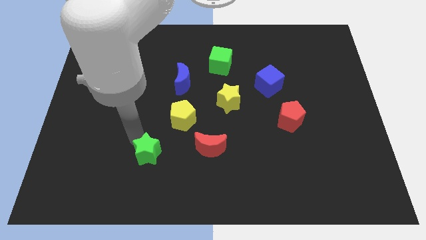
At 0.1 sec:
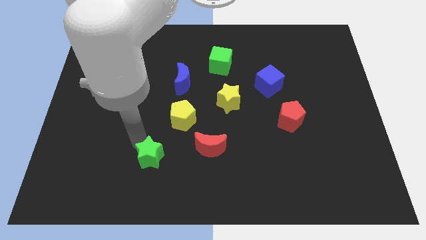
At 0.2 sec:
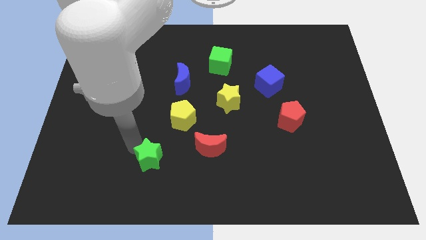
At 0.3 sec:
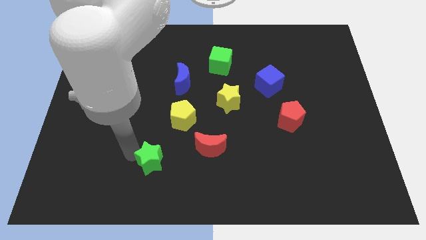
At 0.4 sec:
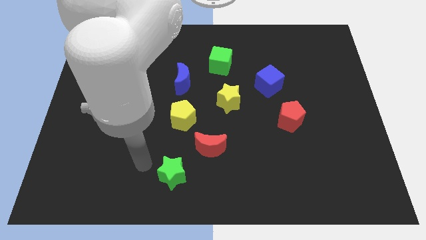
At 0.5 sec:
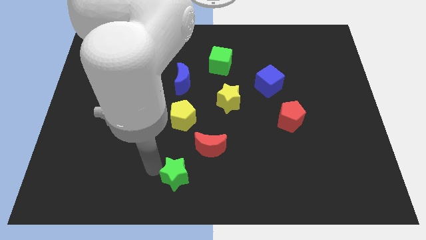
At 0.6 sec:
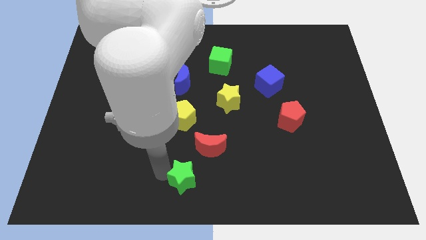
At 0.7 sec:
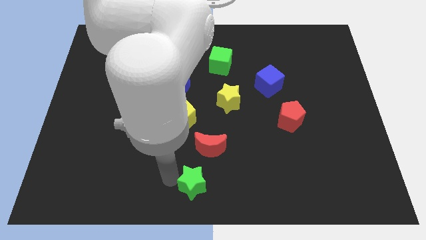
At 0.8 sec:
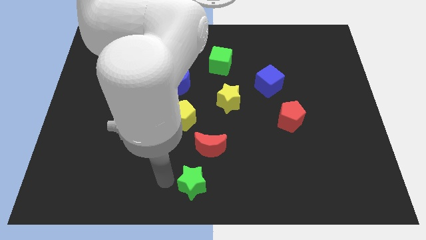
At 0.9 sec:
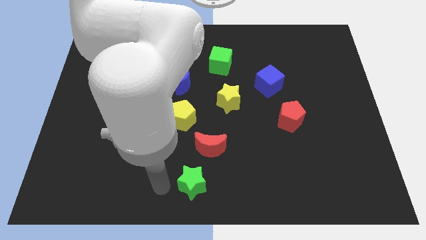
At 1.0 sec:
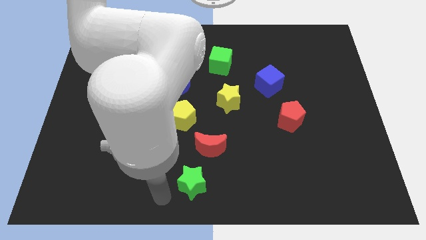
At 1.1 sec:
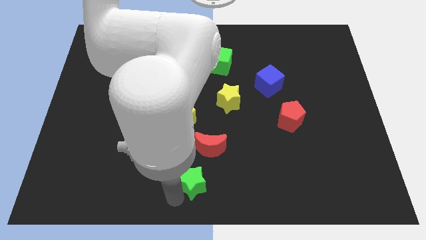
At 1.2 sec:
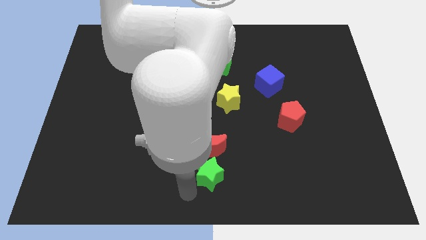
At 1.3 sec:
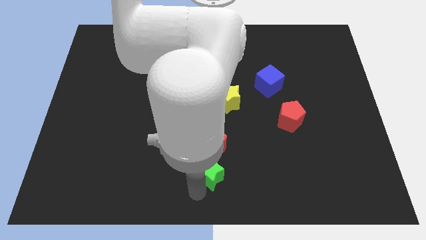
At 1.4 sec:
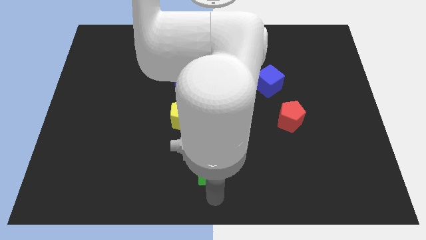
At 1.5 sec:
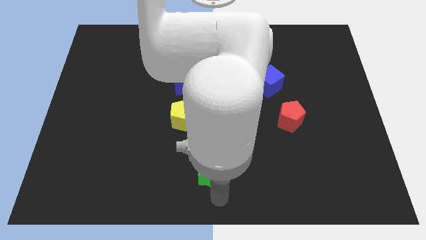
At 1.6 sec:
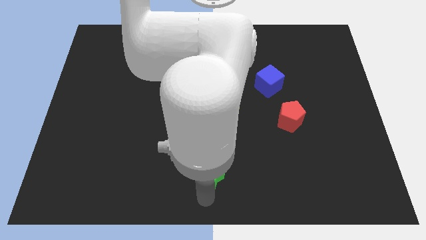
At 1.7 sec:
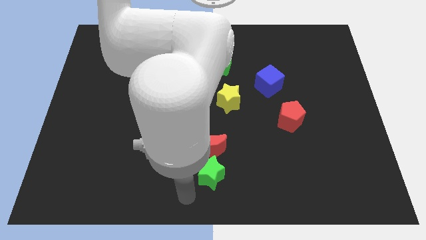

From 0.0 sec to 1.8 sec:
place the green star underneath the red moon

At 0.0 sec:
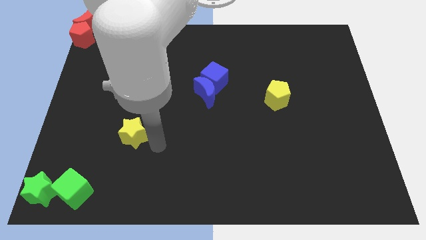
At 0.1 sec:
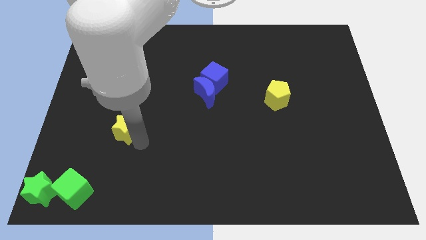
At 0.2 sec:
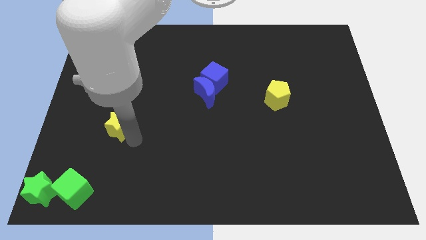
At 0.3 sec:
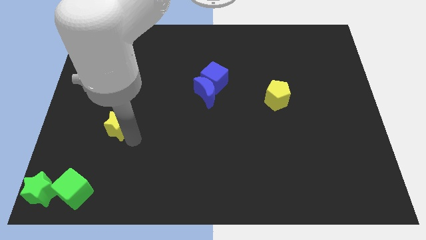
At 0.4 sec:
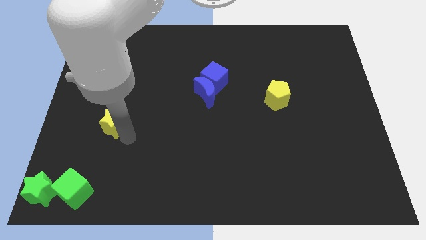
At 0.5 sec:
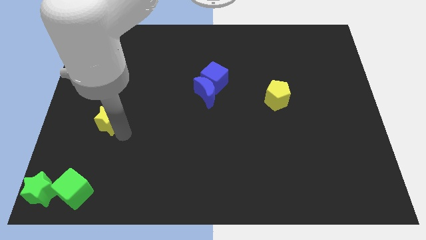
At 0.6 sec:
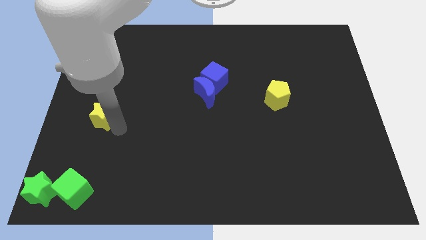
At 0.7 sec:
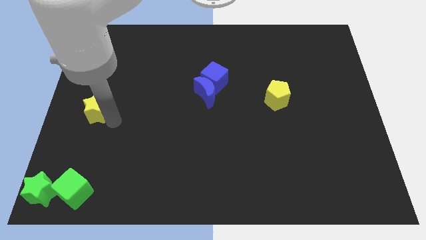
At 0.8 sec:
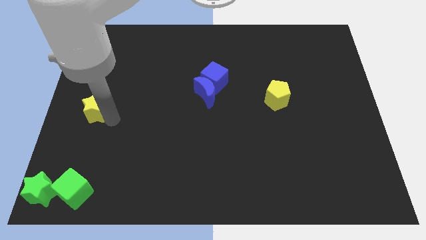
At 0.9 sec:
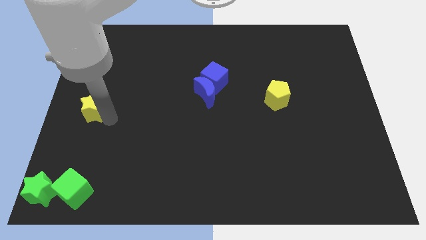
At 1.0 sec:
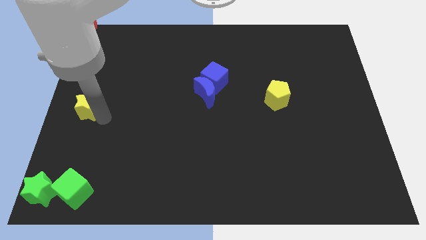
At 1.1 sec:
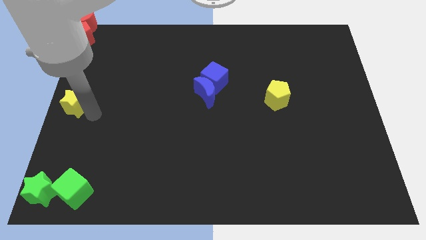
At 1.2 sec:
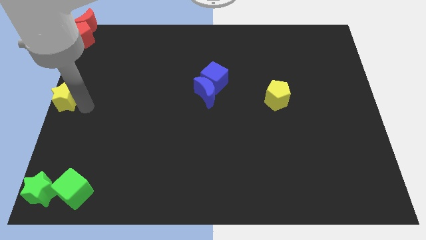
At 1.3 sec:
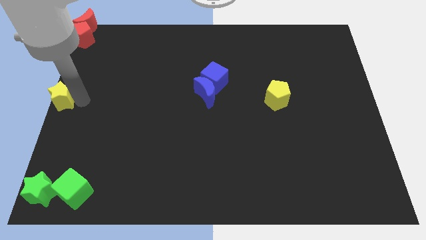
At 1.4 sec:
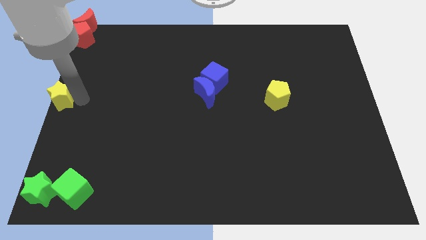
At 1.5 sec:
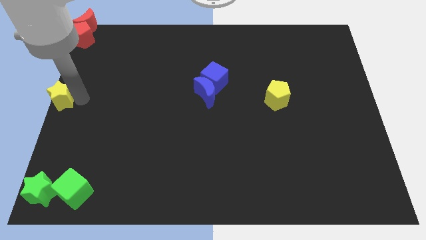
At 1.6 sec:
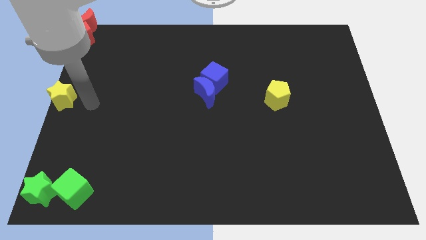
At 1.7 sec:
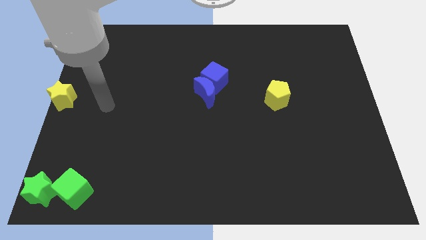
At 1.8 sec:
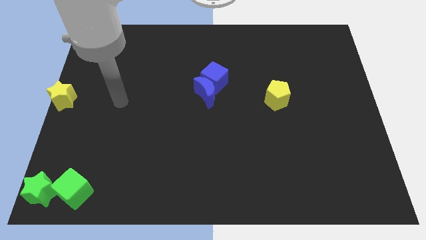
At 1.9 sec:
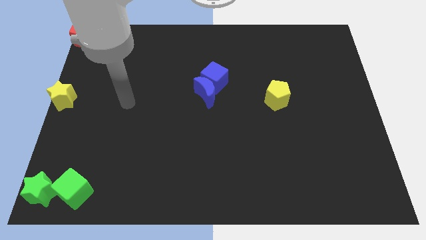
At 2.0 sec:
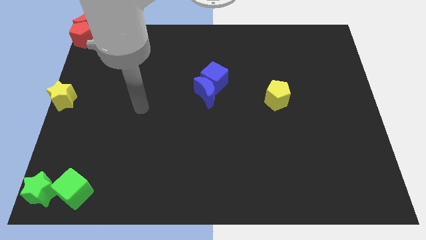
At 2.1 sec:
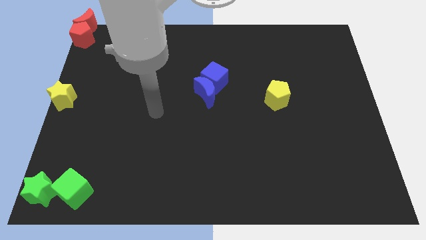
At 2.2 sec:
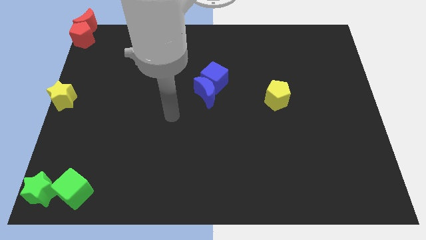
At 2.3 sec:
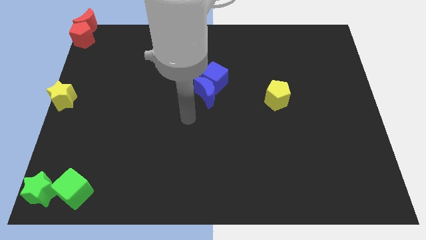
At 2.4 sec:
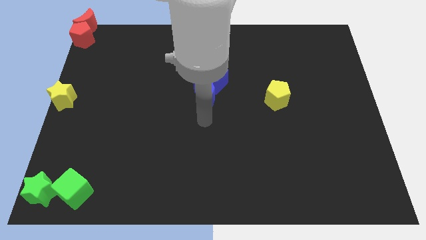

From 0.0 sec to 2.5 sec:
push the yellow star to the center left of the board
